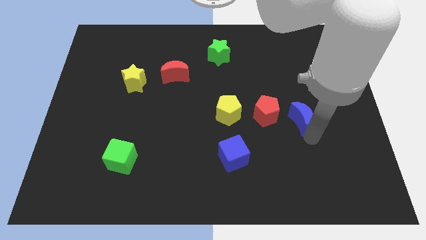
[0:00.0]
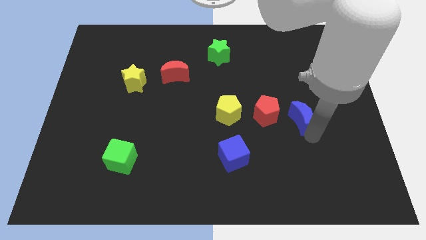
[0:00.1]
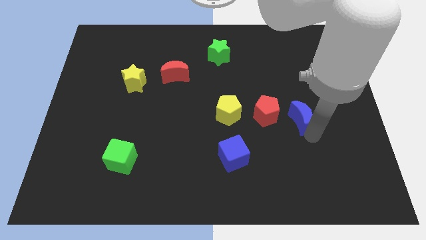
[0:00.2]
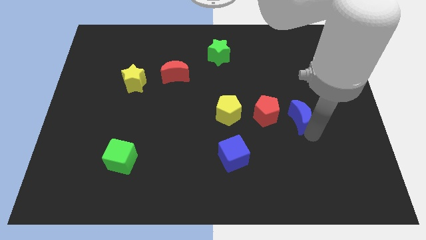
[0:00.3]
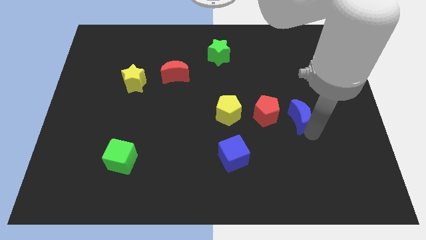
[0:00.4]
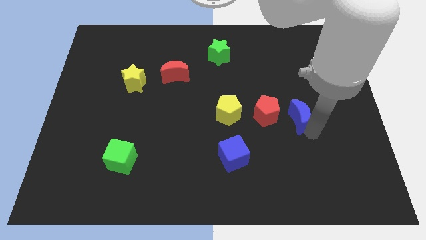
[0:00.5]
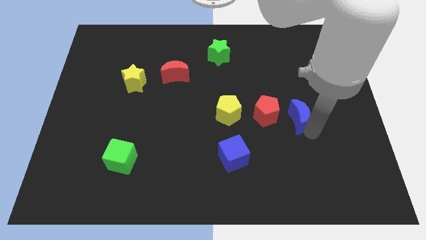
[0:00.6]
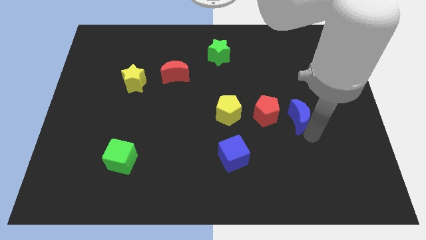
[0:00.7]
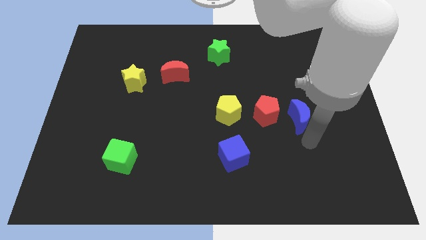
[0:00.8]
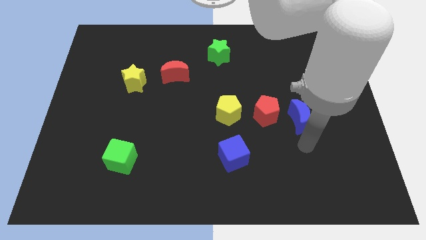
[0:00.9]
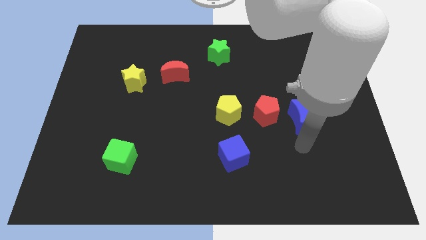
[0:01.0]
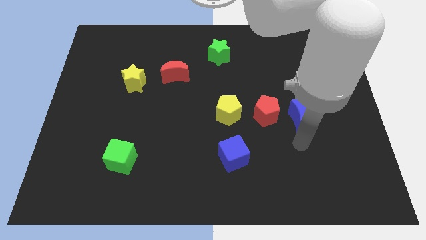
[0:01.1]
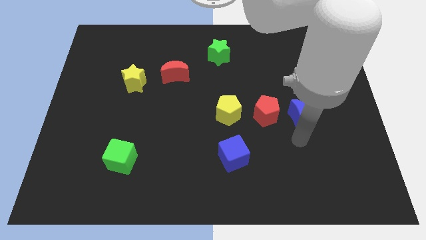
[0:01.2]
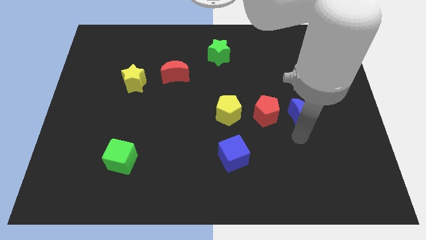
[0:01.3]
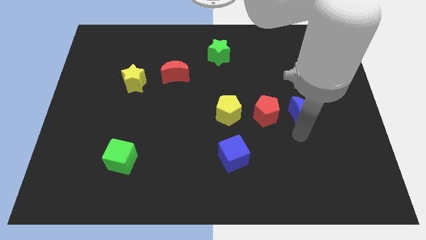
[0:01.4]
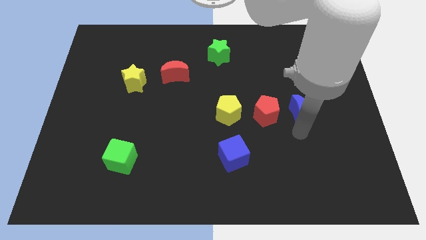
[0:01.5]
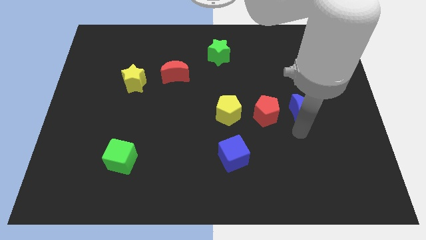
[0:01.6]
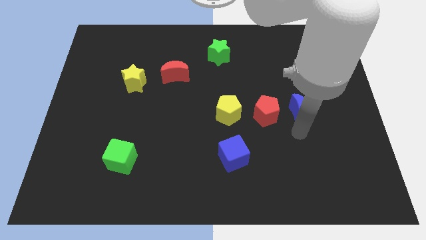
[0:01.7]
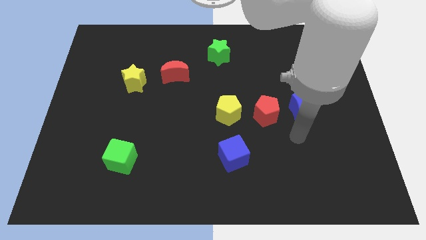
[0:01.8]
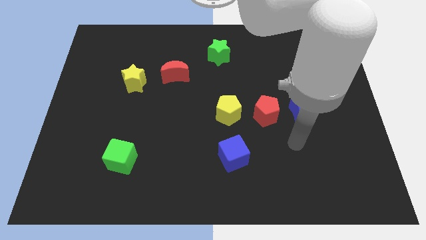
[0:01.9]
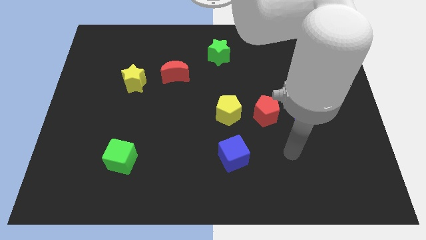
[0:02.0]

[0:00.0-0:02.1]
move the blue crescent close to the red pentagon

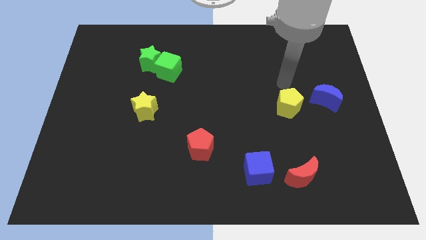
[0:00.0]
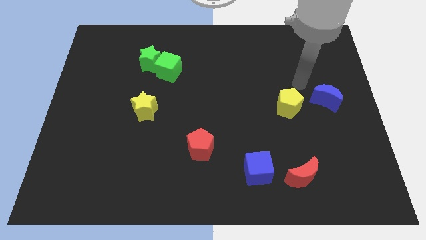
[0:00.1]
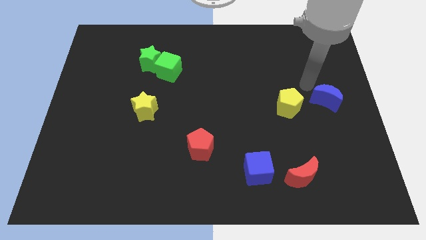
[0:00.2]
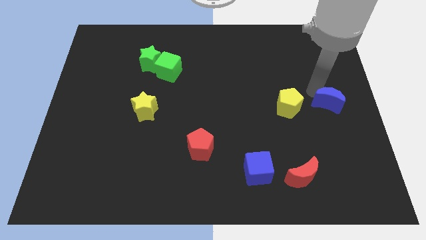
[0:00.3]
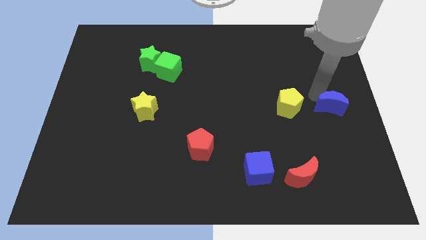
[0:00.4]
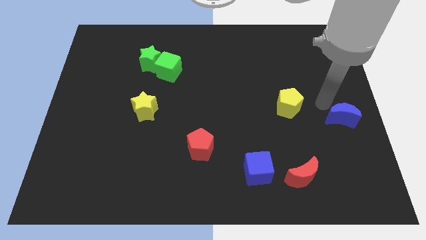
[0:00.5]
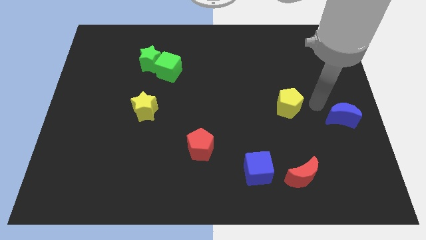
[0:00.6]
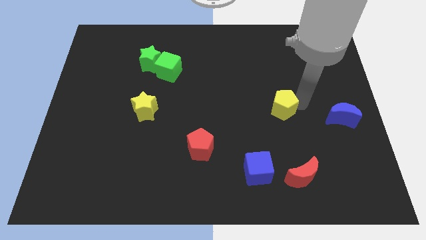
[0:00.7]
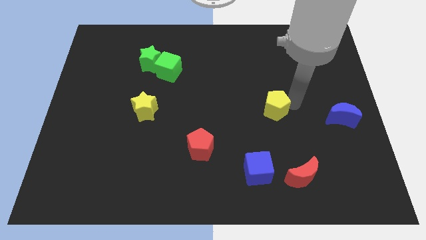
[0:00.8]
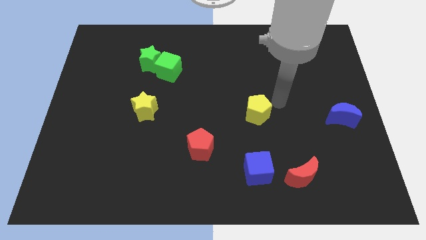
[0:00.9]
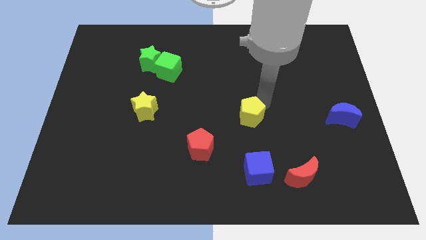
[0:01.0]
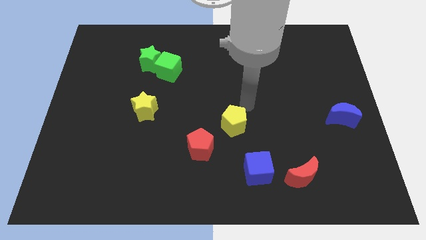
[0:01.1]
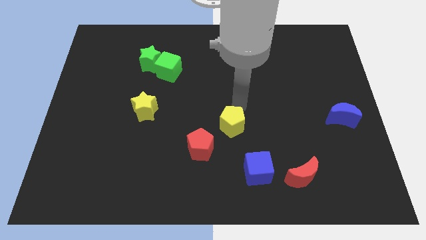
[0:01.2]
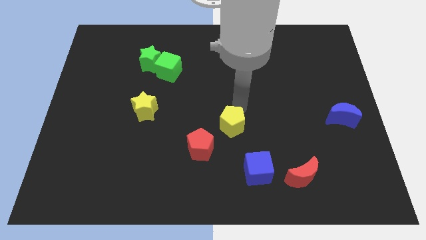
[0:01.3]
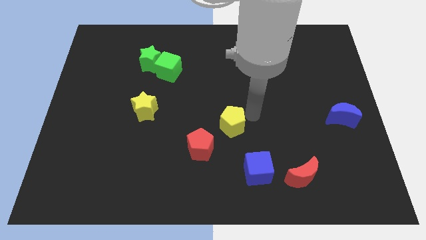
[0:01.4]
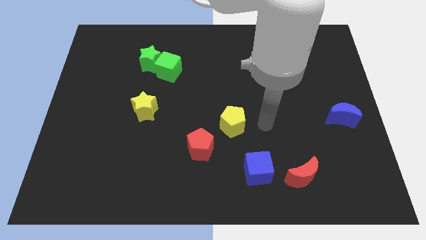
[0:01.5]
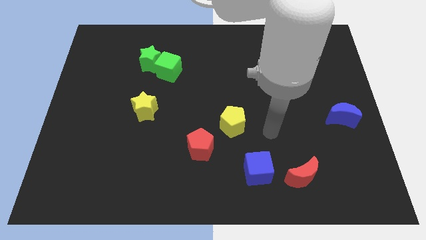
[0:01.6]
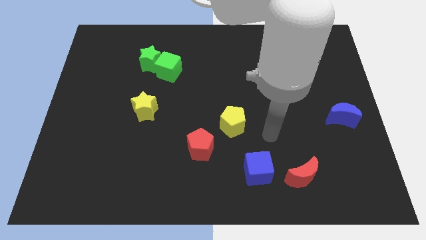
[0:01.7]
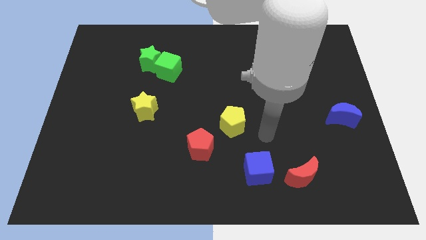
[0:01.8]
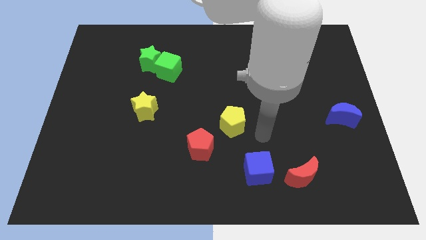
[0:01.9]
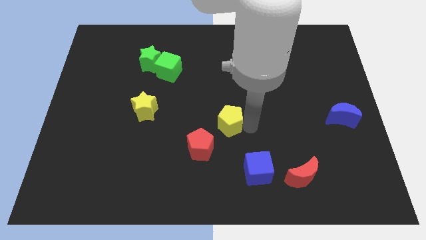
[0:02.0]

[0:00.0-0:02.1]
place the yellow pentagon diagonally to green cube

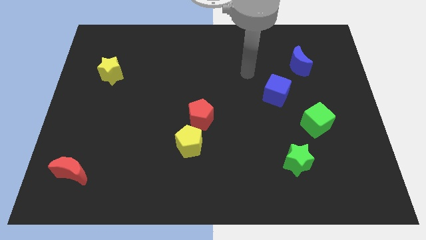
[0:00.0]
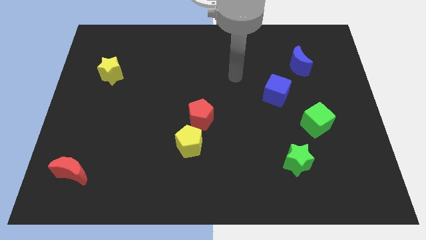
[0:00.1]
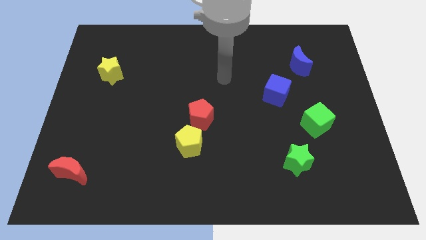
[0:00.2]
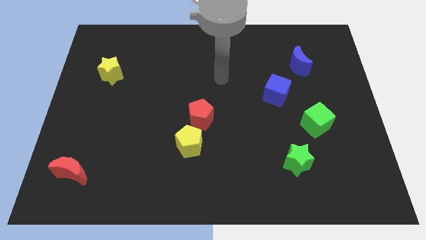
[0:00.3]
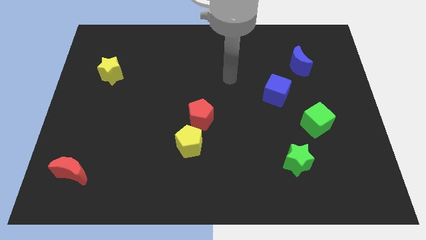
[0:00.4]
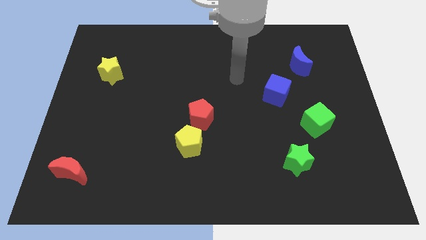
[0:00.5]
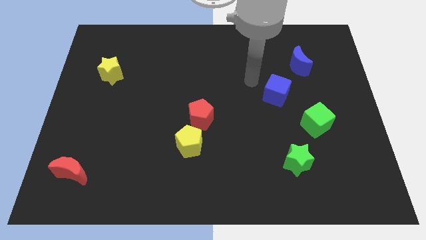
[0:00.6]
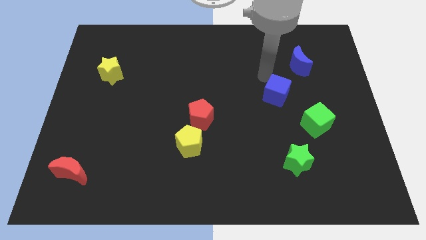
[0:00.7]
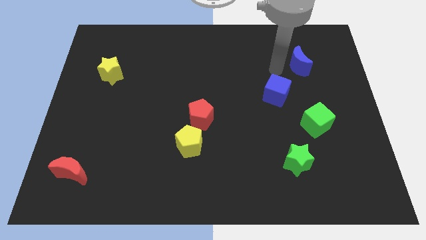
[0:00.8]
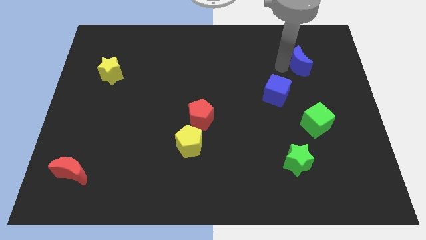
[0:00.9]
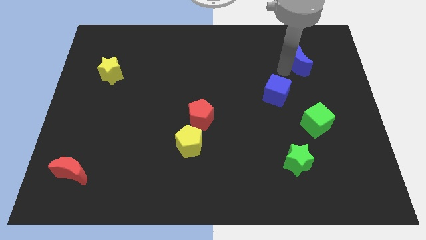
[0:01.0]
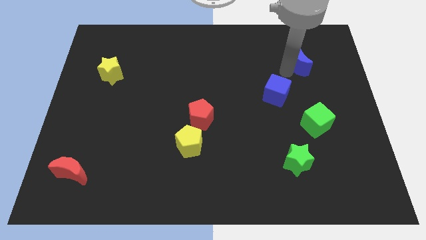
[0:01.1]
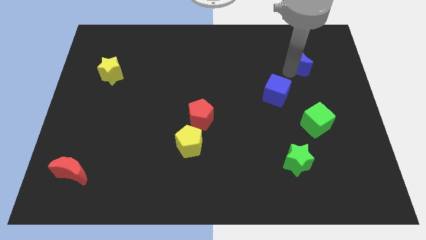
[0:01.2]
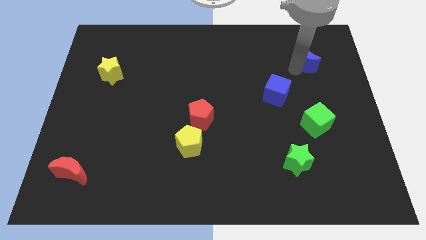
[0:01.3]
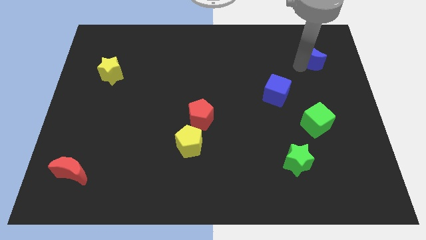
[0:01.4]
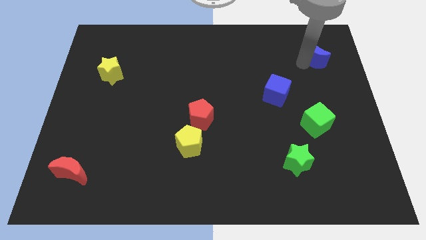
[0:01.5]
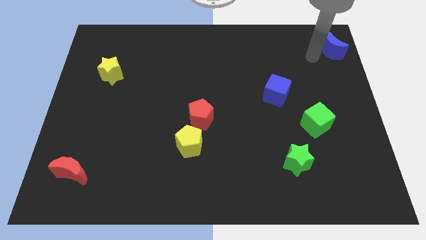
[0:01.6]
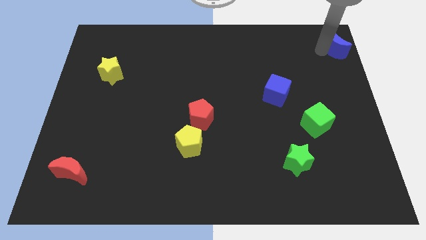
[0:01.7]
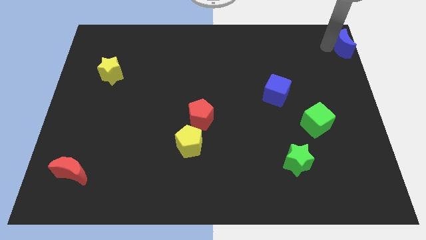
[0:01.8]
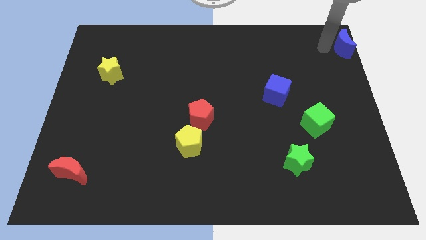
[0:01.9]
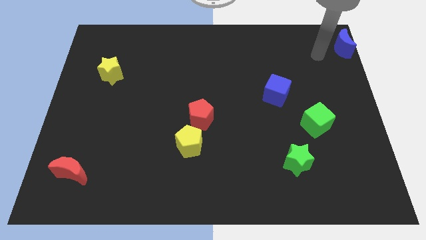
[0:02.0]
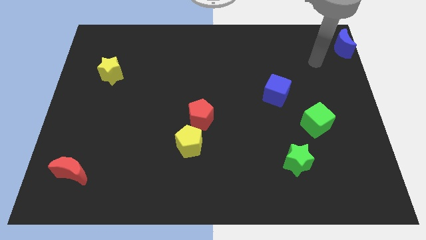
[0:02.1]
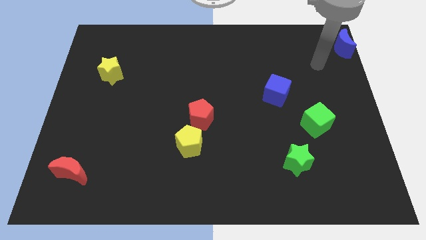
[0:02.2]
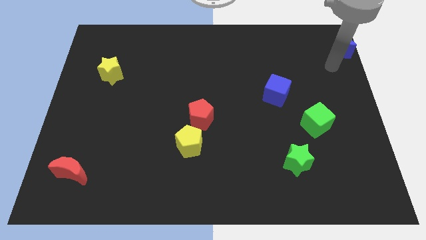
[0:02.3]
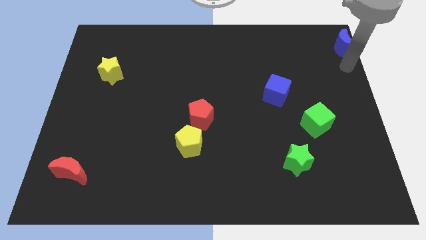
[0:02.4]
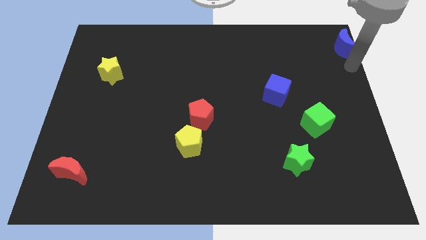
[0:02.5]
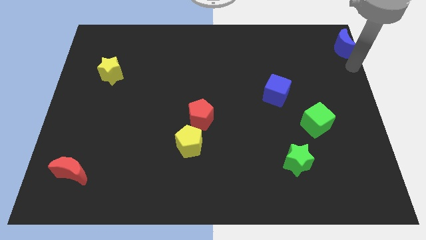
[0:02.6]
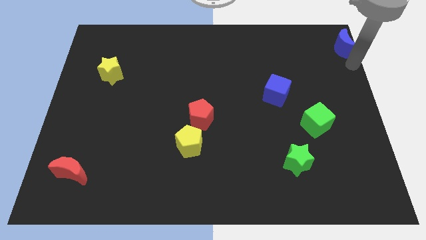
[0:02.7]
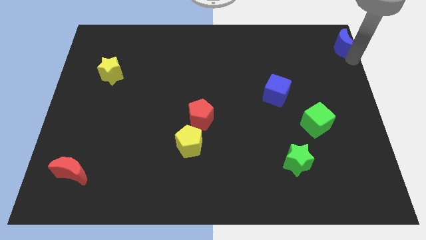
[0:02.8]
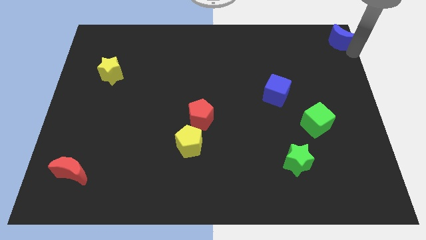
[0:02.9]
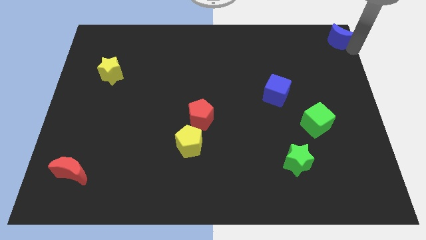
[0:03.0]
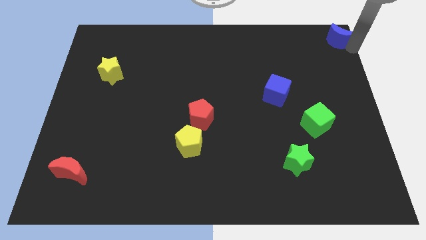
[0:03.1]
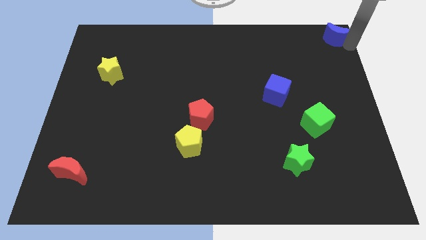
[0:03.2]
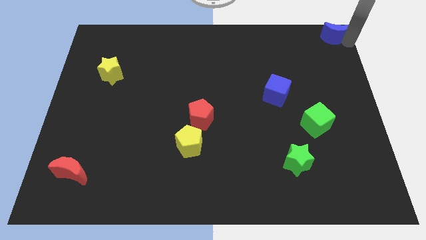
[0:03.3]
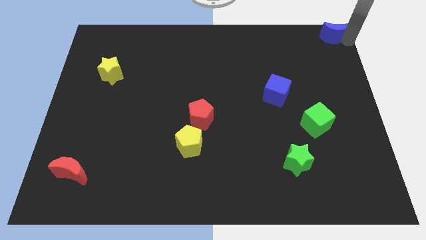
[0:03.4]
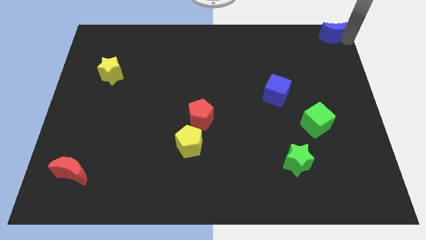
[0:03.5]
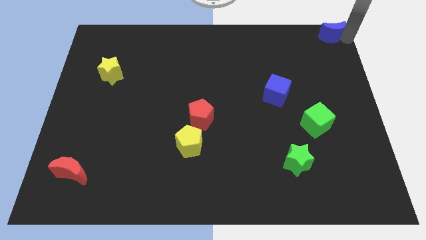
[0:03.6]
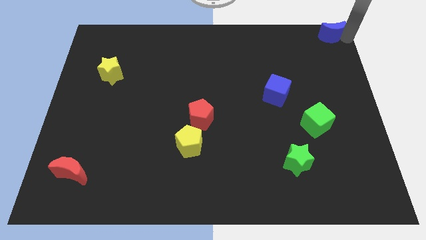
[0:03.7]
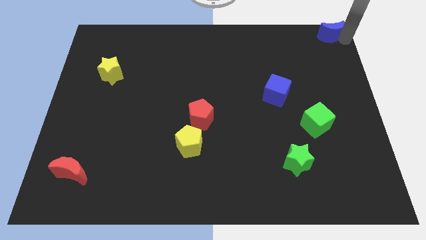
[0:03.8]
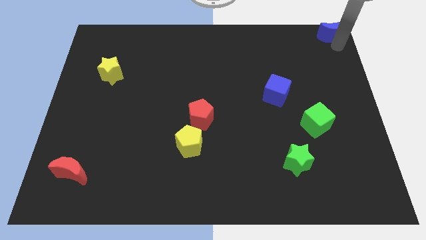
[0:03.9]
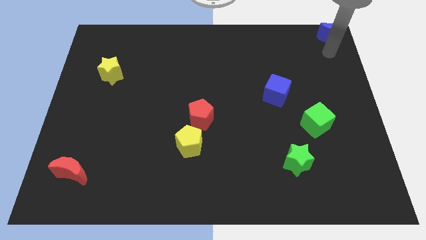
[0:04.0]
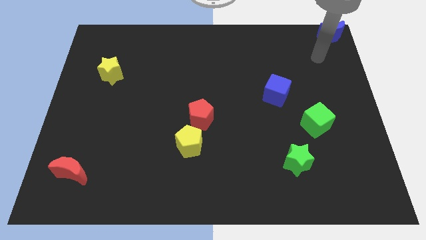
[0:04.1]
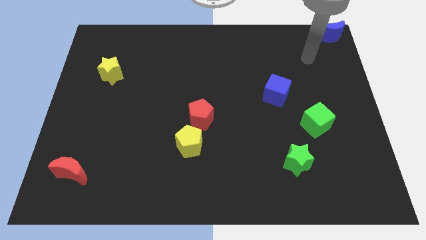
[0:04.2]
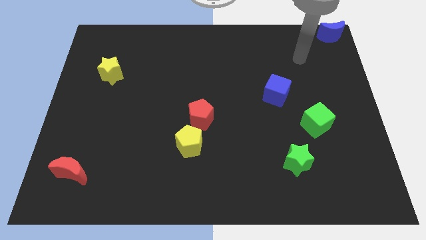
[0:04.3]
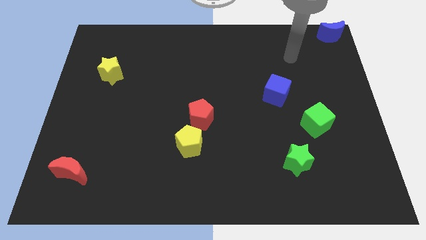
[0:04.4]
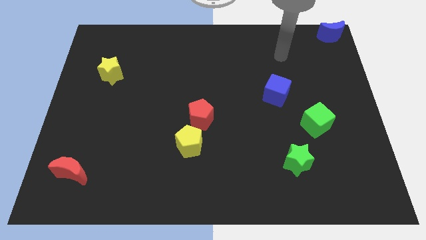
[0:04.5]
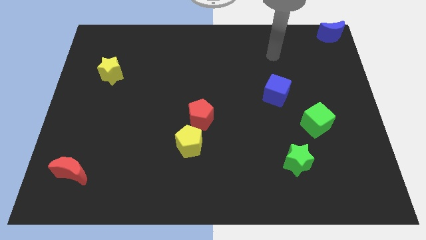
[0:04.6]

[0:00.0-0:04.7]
move the blue moon to the top right corner of the board
